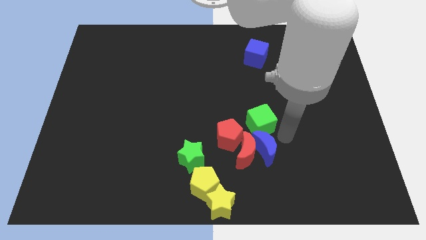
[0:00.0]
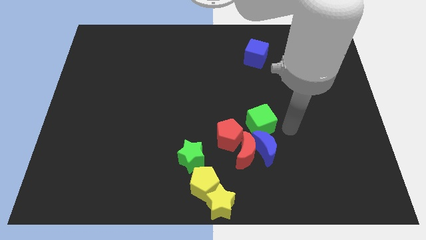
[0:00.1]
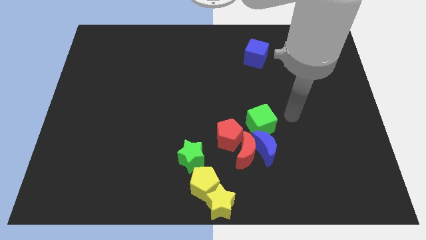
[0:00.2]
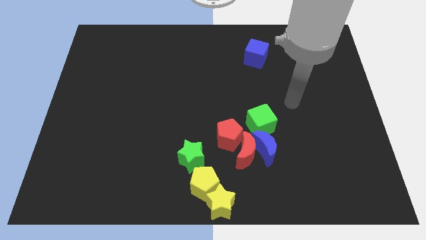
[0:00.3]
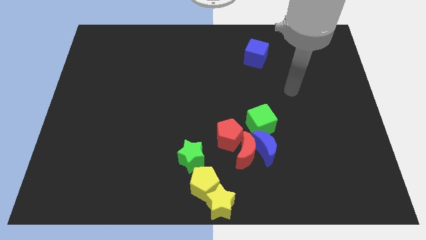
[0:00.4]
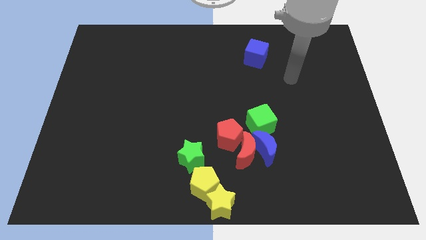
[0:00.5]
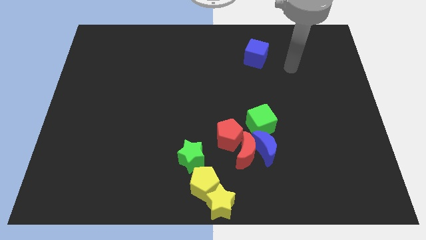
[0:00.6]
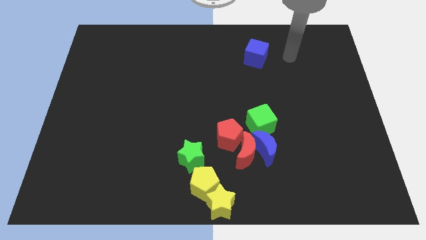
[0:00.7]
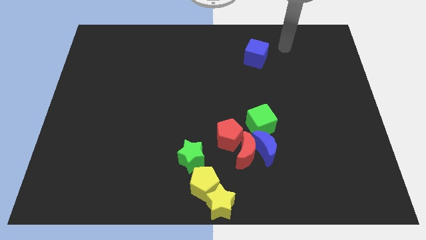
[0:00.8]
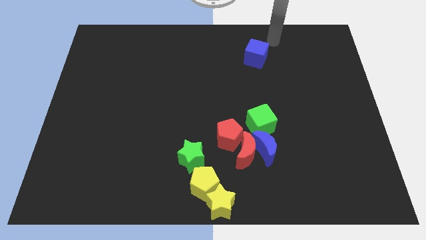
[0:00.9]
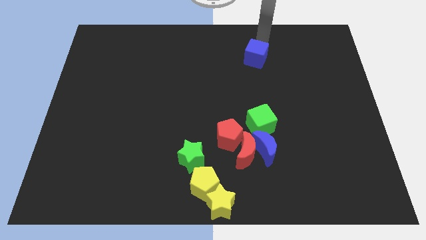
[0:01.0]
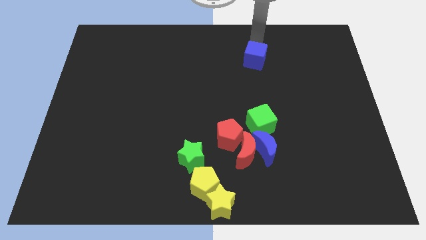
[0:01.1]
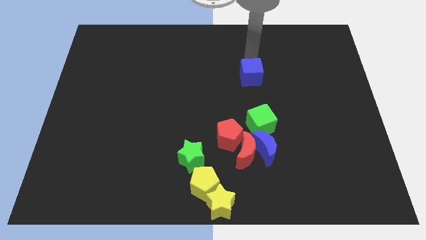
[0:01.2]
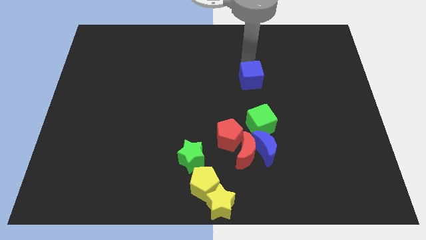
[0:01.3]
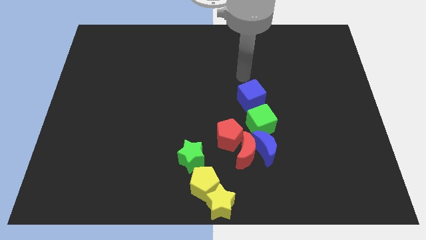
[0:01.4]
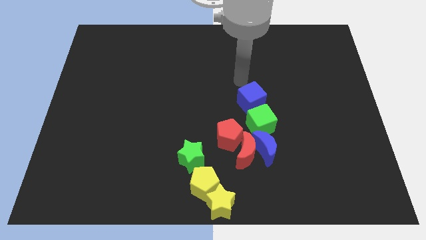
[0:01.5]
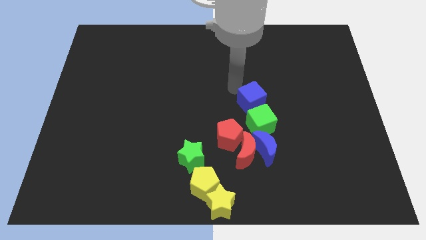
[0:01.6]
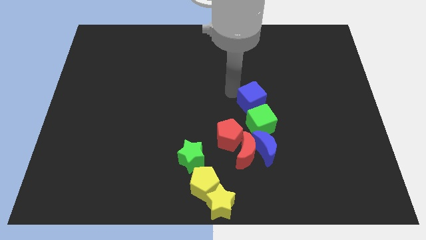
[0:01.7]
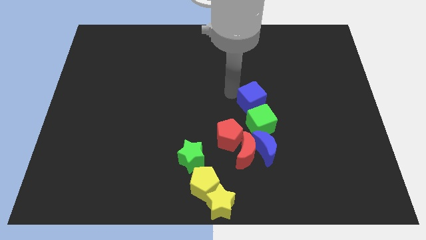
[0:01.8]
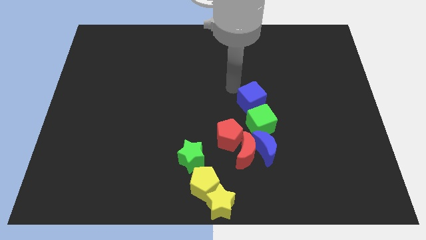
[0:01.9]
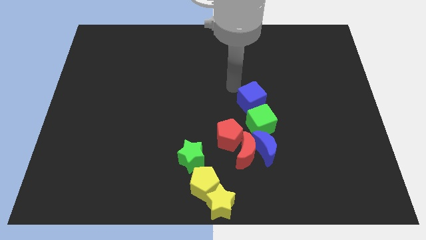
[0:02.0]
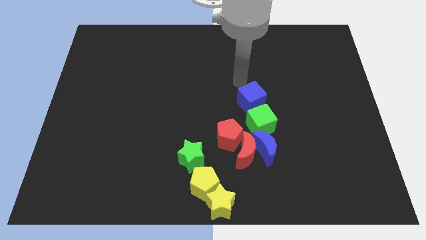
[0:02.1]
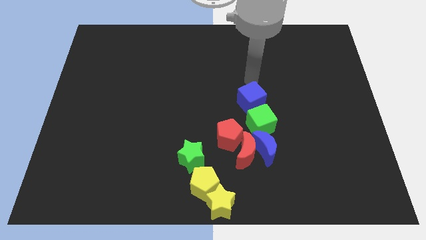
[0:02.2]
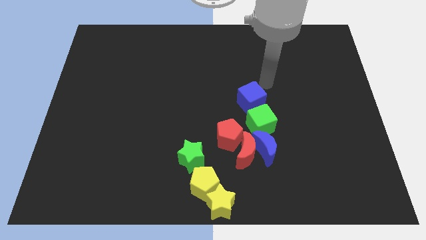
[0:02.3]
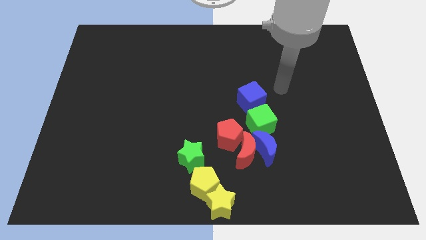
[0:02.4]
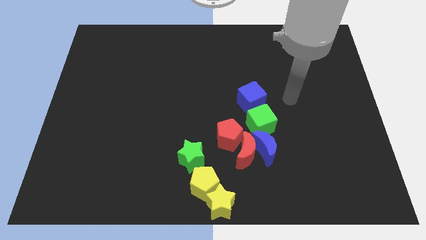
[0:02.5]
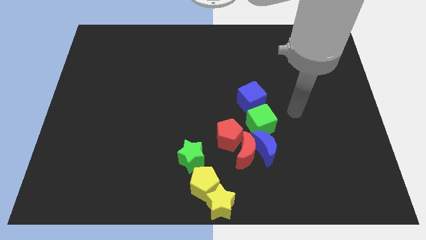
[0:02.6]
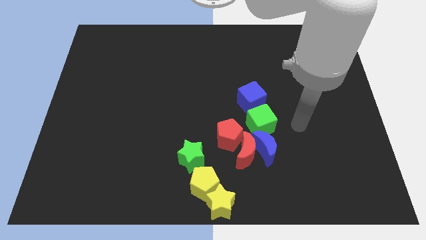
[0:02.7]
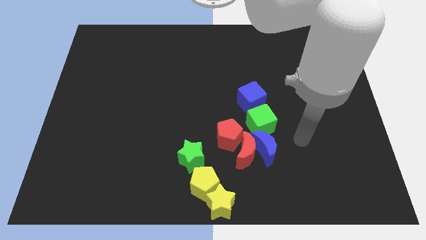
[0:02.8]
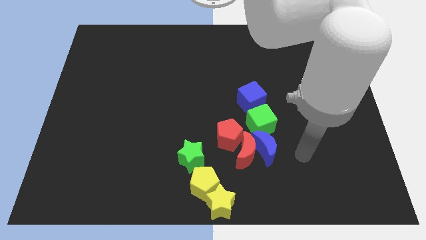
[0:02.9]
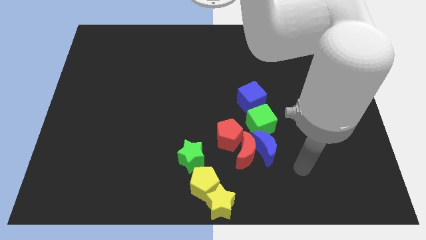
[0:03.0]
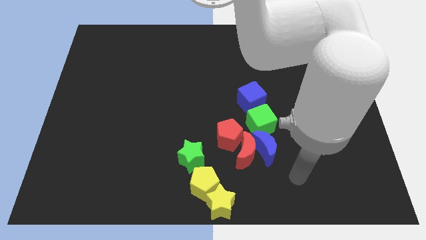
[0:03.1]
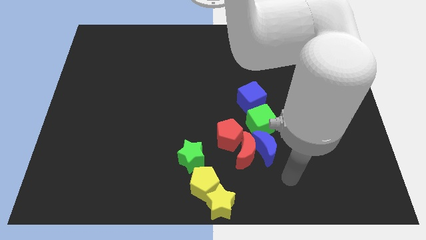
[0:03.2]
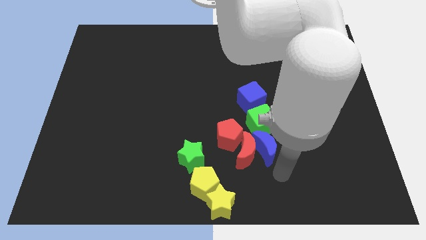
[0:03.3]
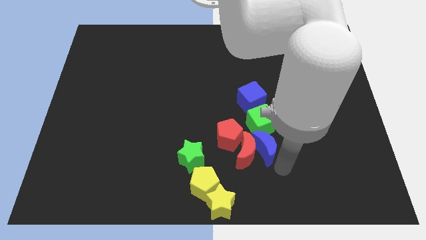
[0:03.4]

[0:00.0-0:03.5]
put the blue cube above the green cube

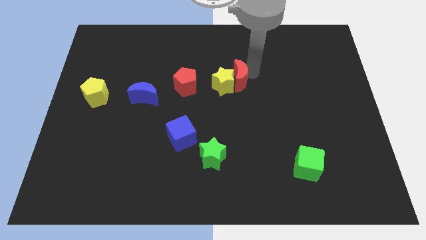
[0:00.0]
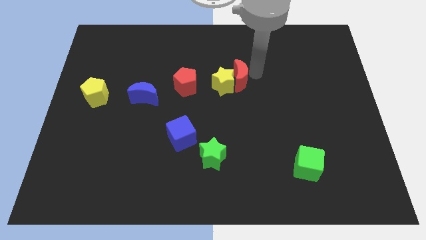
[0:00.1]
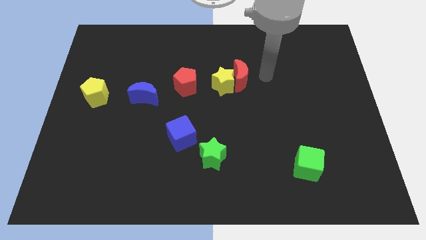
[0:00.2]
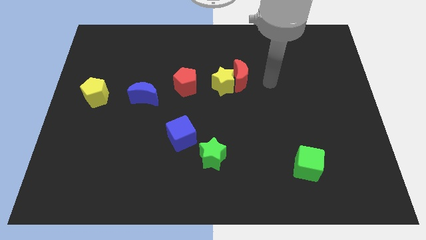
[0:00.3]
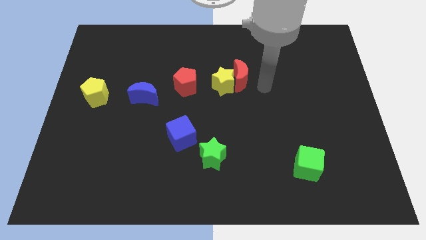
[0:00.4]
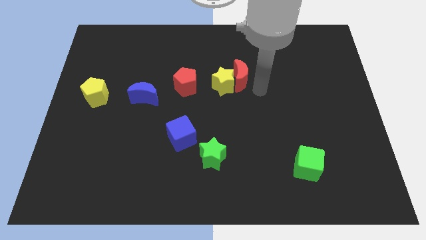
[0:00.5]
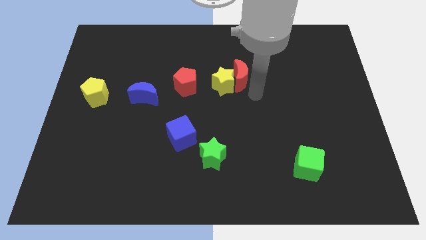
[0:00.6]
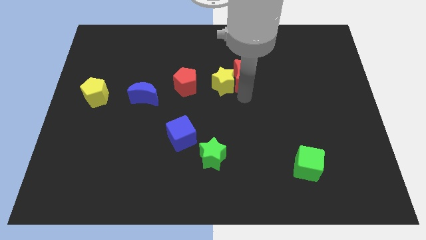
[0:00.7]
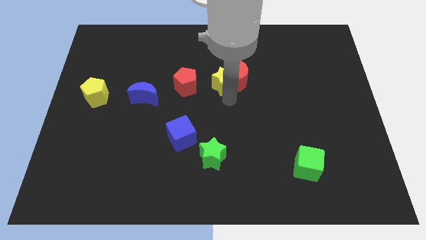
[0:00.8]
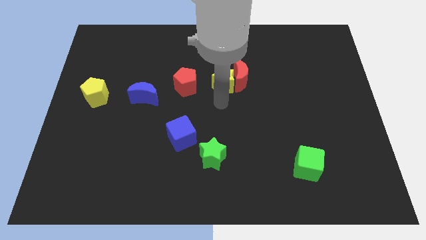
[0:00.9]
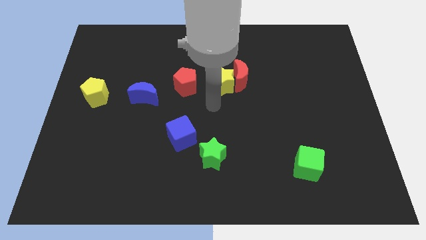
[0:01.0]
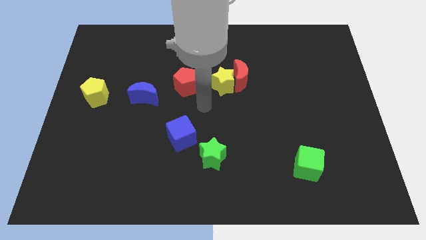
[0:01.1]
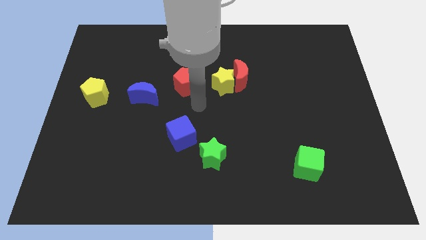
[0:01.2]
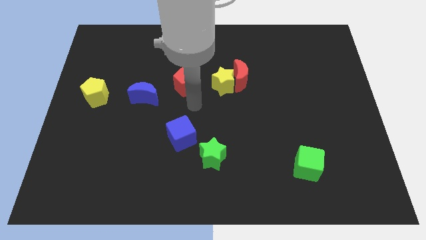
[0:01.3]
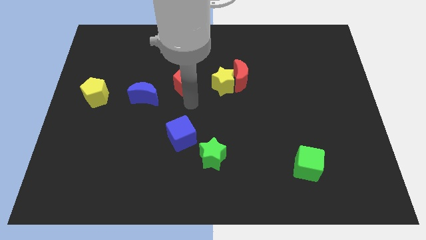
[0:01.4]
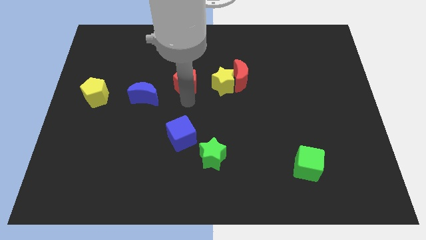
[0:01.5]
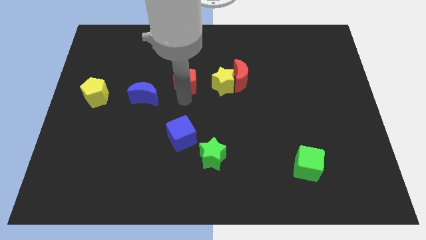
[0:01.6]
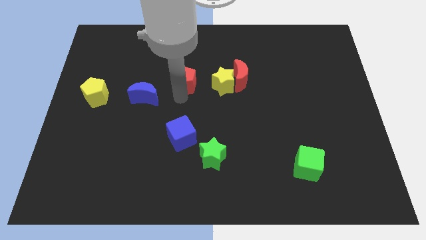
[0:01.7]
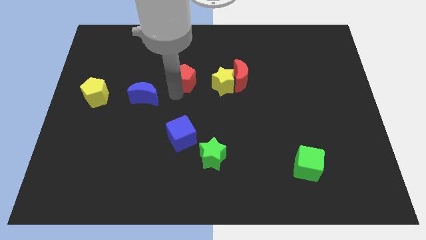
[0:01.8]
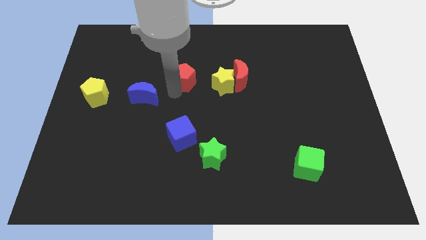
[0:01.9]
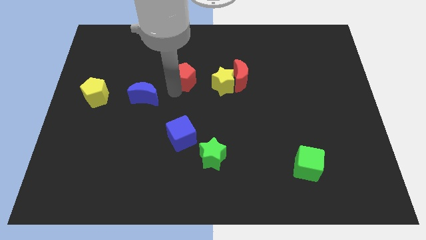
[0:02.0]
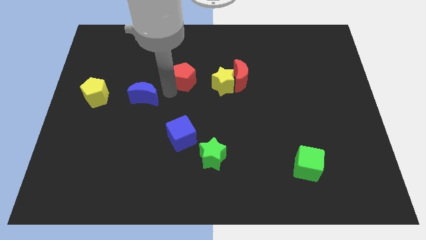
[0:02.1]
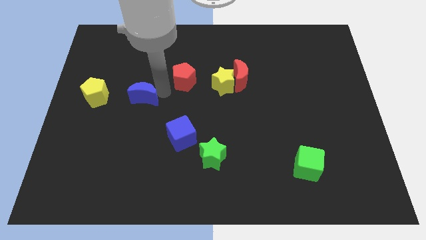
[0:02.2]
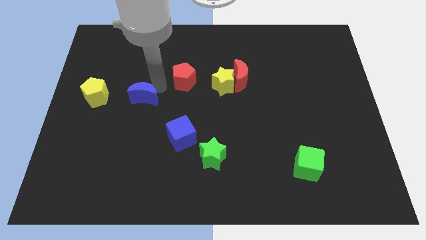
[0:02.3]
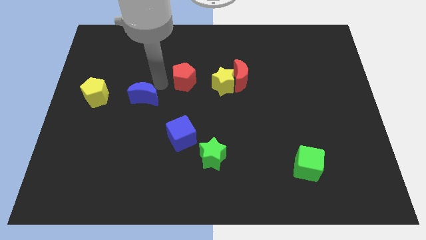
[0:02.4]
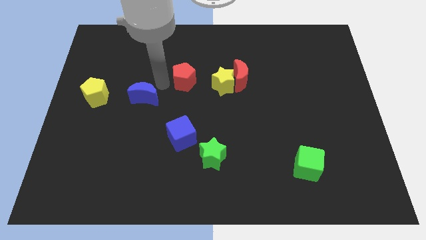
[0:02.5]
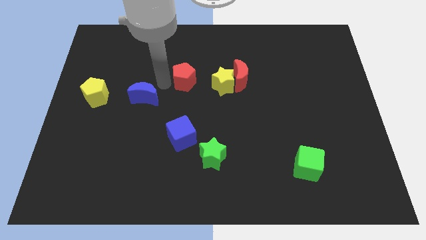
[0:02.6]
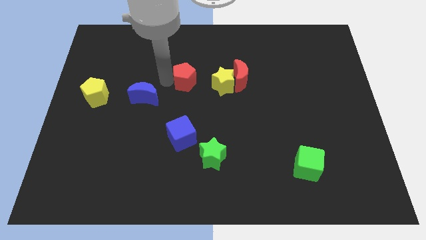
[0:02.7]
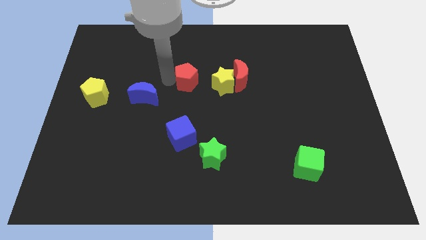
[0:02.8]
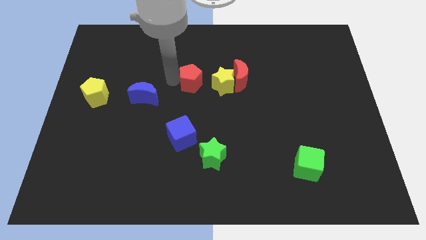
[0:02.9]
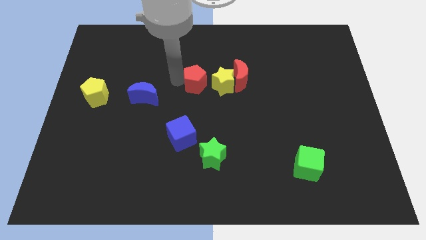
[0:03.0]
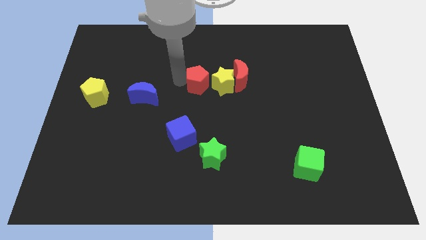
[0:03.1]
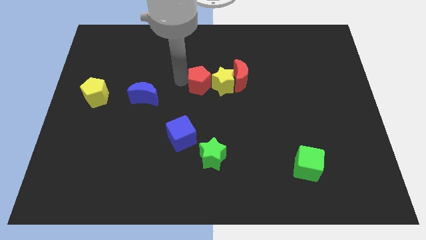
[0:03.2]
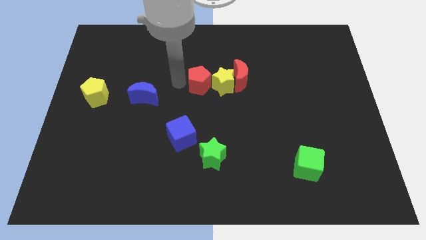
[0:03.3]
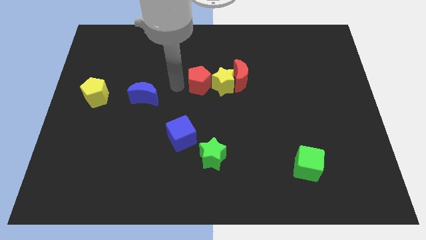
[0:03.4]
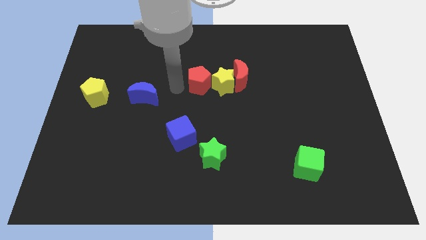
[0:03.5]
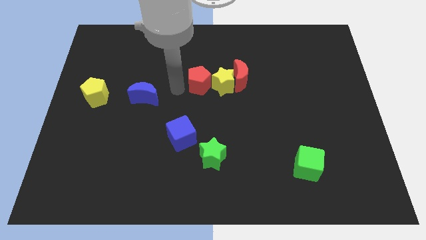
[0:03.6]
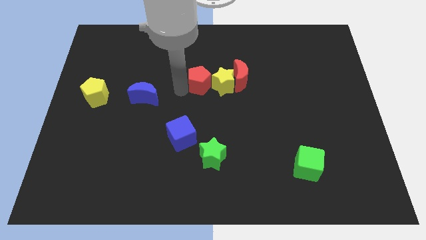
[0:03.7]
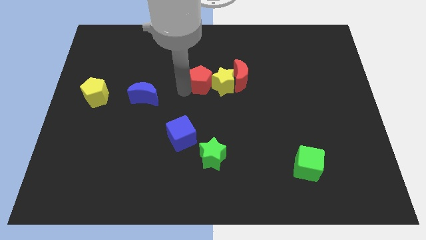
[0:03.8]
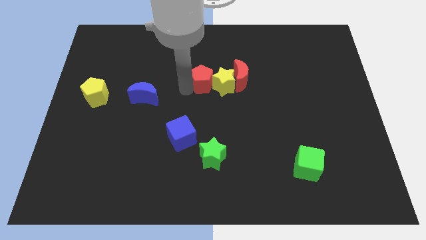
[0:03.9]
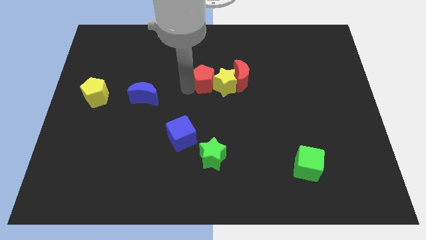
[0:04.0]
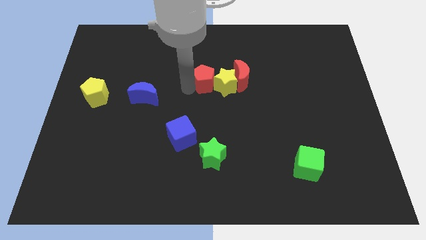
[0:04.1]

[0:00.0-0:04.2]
move red pentagon to the left of yellow star

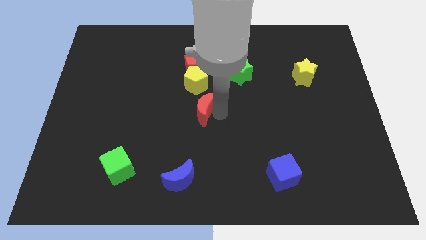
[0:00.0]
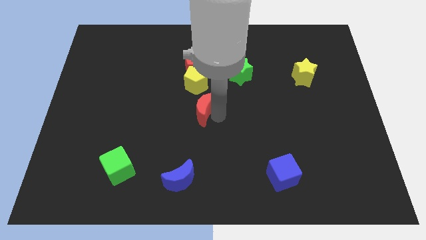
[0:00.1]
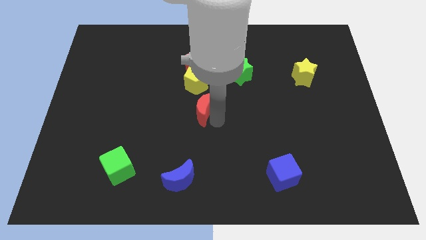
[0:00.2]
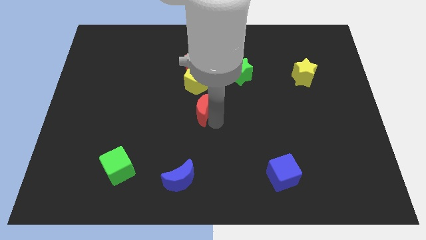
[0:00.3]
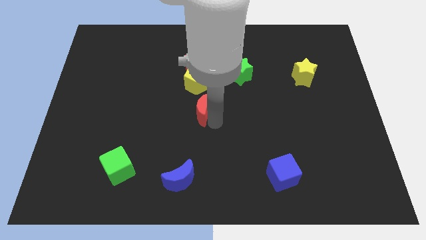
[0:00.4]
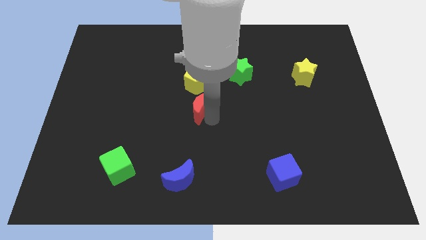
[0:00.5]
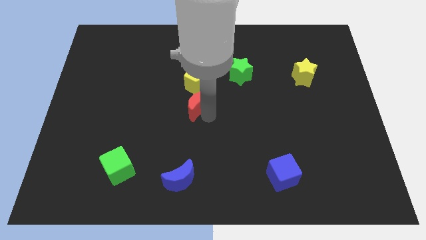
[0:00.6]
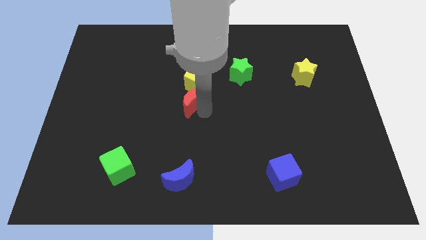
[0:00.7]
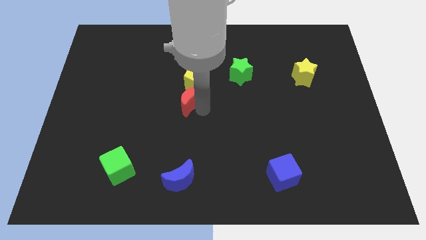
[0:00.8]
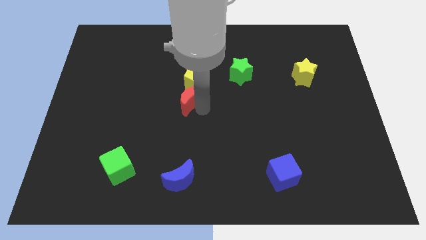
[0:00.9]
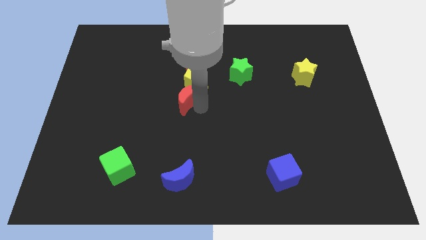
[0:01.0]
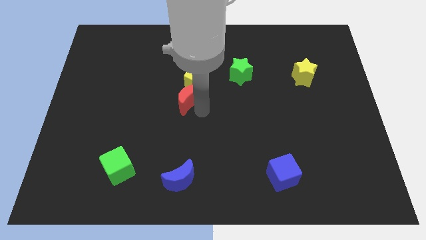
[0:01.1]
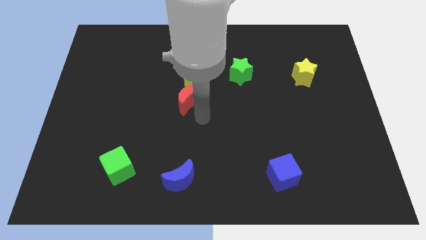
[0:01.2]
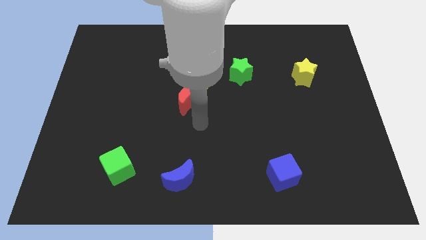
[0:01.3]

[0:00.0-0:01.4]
place the red crescent below the yellow pentagon
